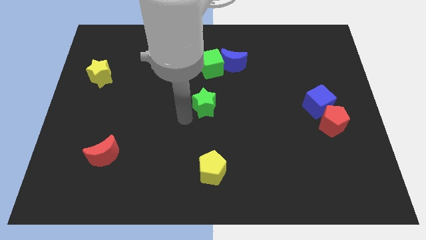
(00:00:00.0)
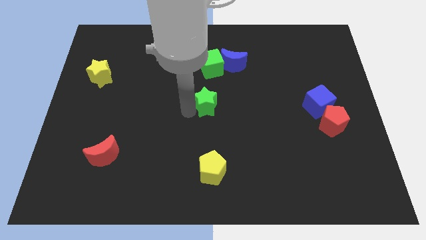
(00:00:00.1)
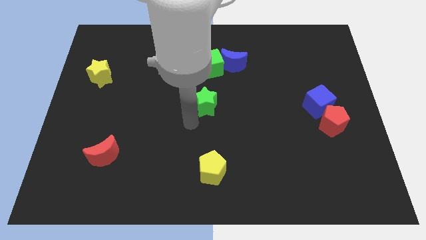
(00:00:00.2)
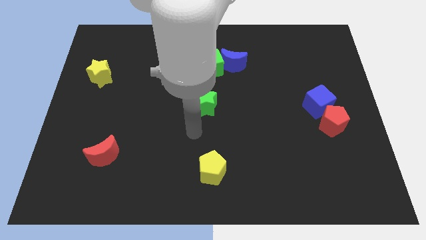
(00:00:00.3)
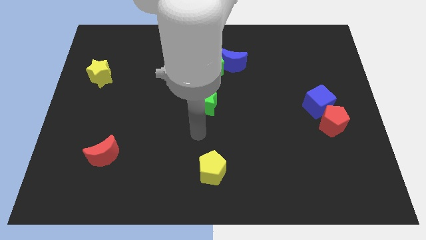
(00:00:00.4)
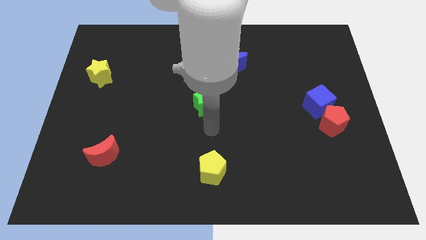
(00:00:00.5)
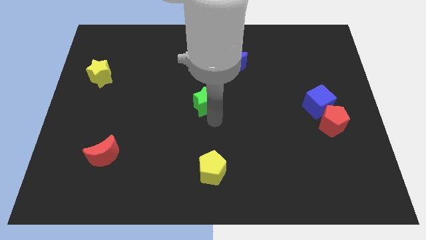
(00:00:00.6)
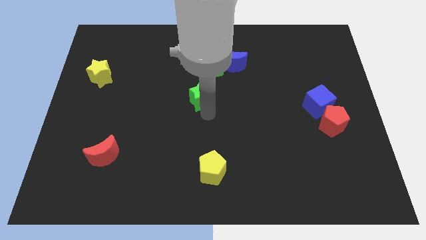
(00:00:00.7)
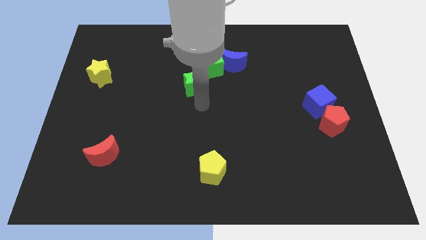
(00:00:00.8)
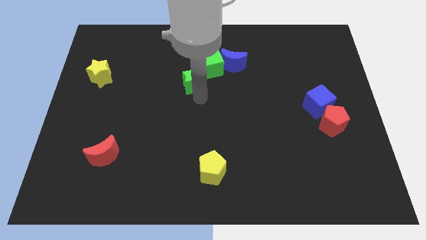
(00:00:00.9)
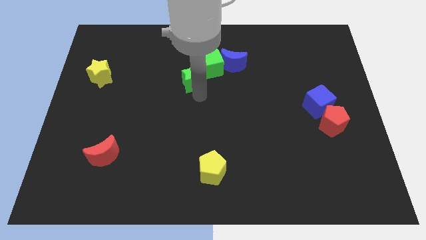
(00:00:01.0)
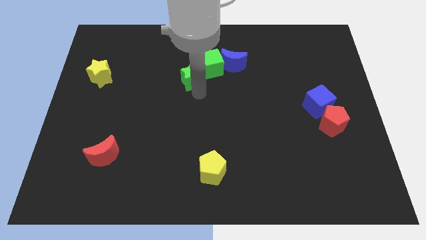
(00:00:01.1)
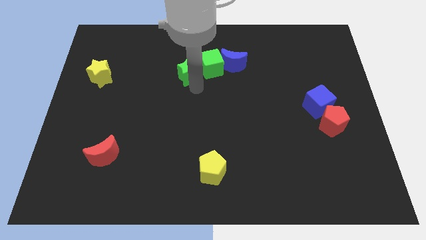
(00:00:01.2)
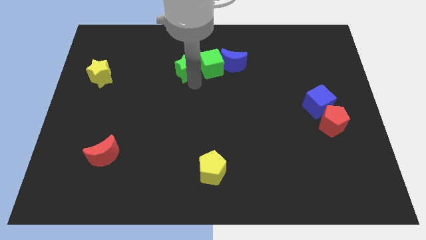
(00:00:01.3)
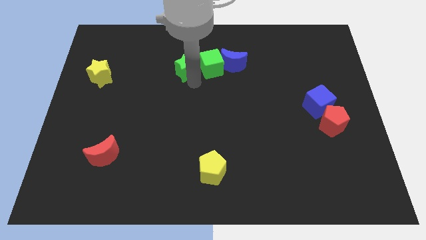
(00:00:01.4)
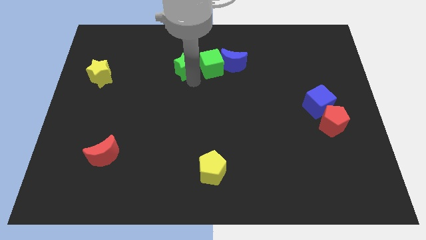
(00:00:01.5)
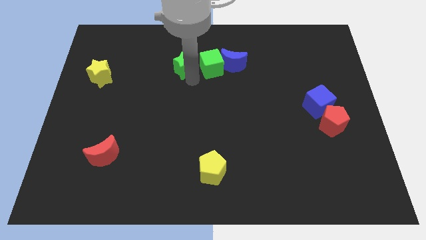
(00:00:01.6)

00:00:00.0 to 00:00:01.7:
place the green star left to the green cube

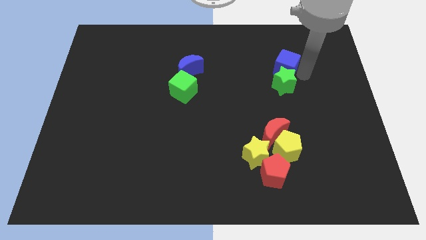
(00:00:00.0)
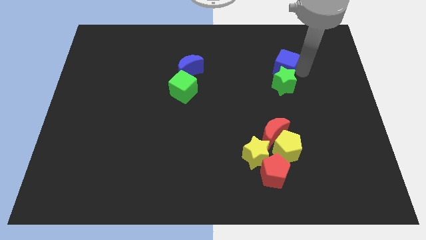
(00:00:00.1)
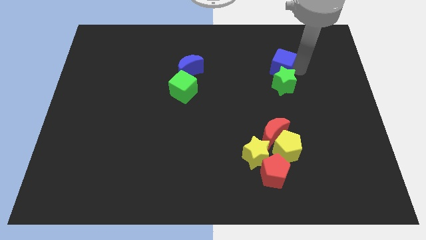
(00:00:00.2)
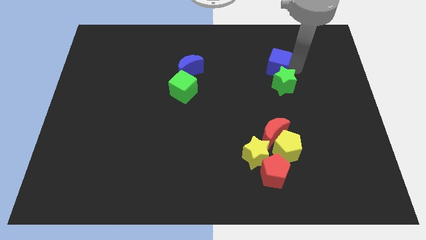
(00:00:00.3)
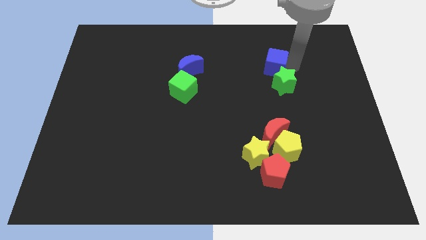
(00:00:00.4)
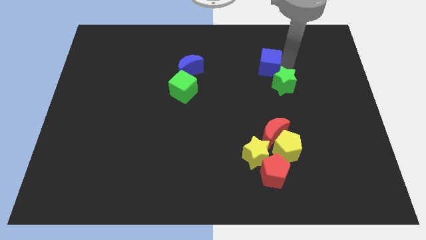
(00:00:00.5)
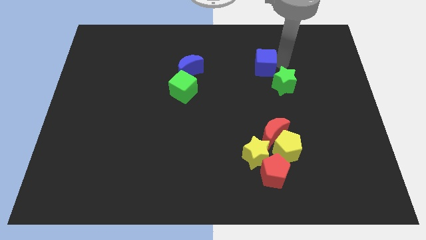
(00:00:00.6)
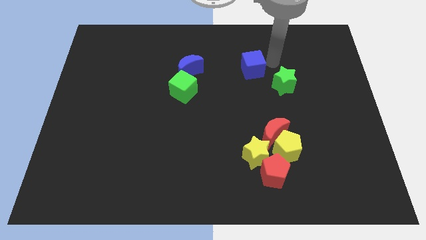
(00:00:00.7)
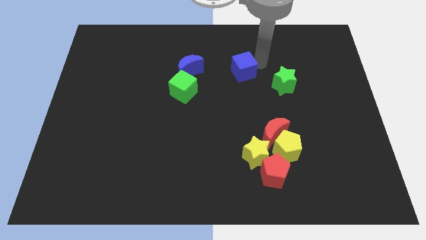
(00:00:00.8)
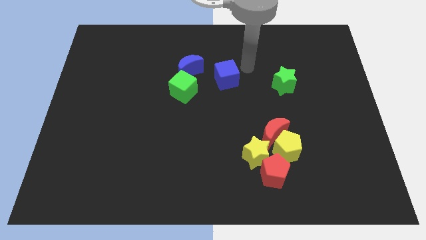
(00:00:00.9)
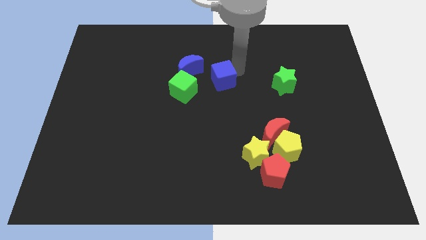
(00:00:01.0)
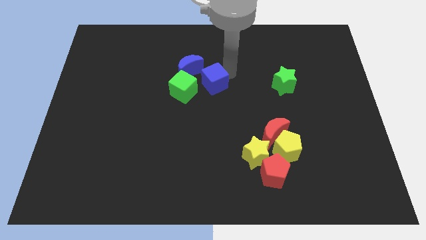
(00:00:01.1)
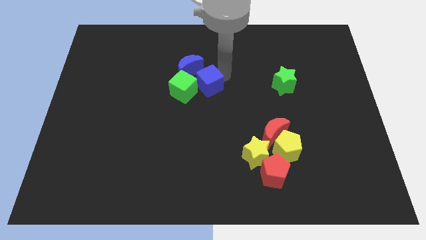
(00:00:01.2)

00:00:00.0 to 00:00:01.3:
move blue cube away from the green star

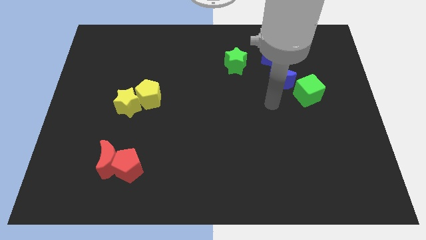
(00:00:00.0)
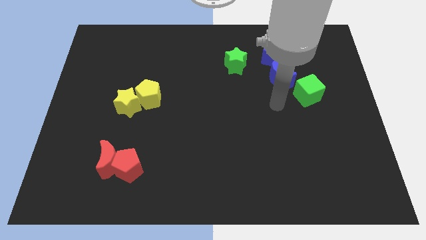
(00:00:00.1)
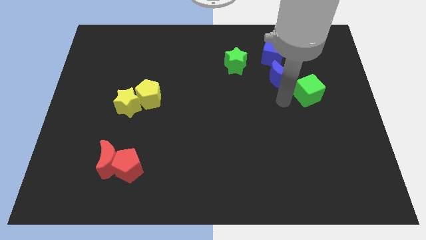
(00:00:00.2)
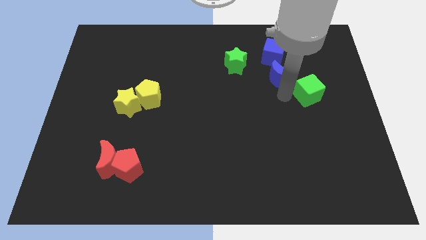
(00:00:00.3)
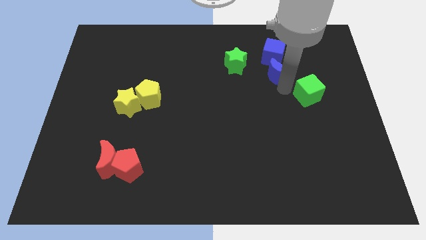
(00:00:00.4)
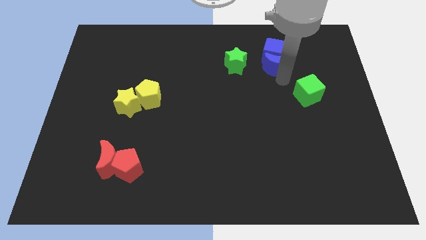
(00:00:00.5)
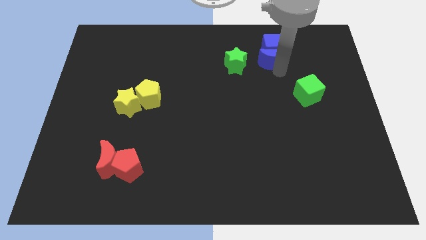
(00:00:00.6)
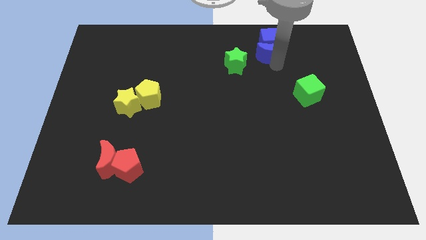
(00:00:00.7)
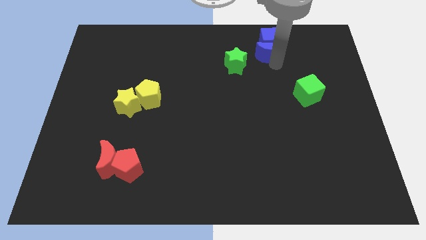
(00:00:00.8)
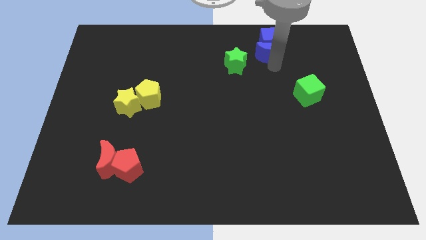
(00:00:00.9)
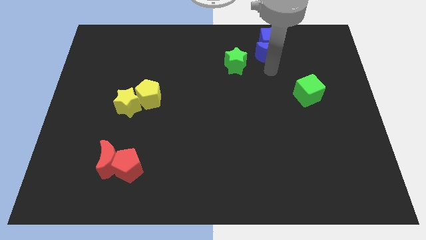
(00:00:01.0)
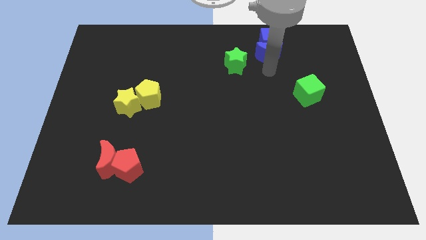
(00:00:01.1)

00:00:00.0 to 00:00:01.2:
push the blue moon into the blue cube

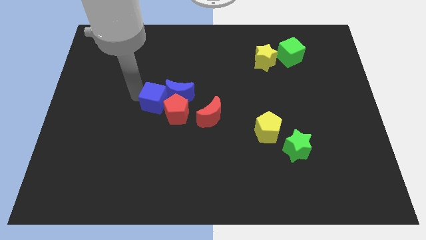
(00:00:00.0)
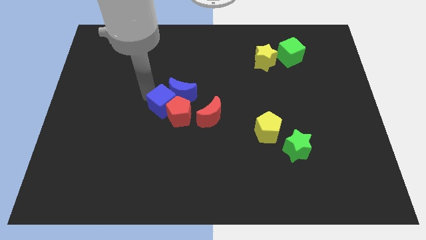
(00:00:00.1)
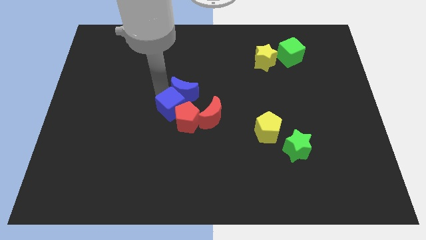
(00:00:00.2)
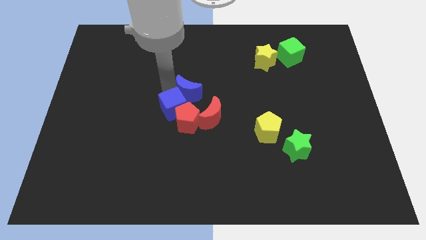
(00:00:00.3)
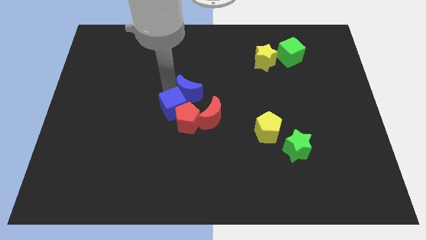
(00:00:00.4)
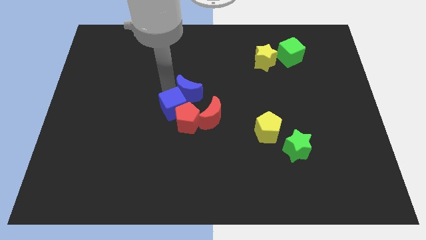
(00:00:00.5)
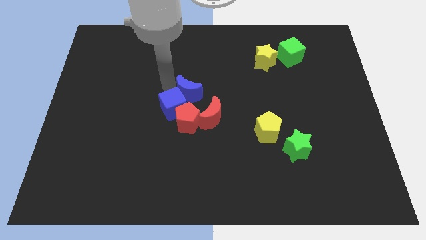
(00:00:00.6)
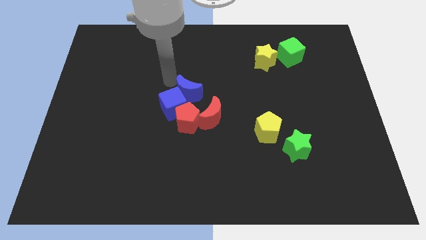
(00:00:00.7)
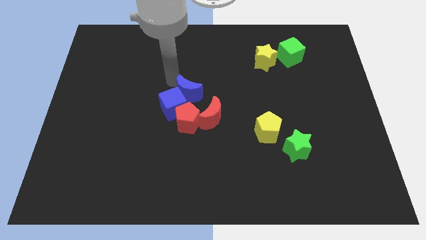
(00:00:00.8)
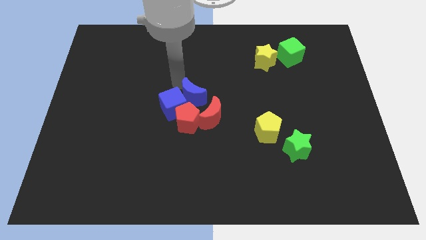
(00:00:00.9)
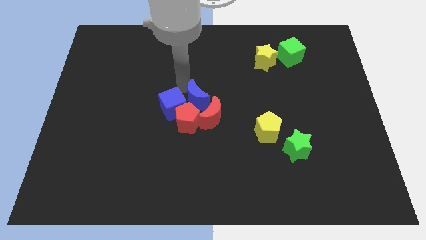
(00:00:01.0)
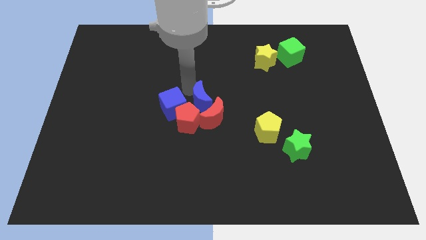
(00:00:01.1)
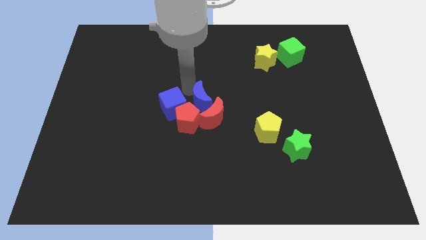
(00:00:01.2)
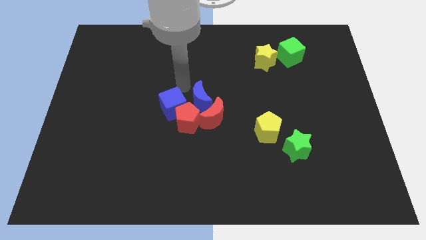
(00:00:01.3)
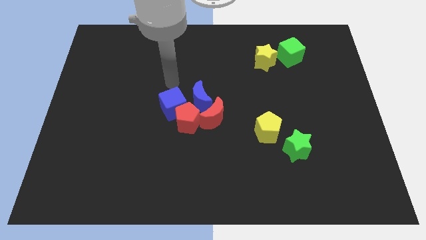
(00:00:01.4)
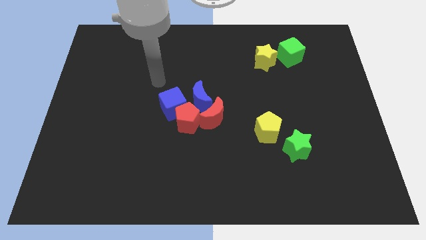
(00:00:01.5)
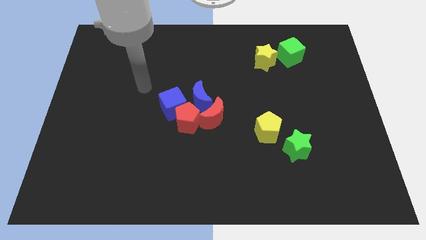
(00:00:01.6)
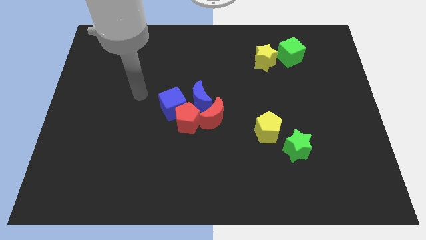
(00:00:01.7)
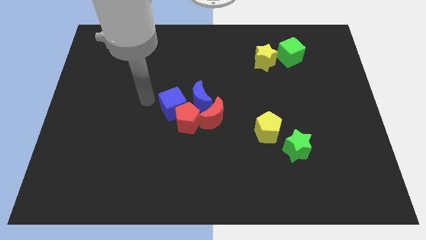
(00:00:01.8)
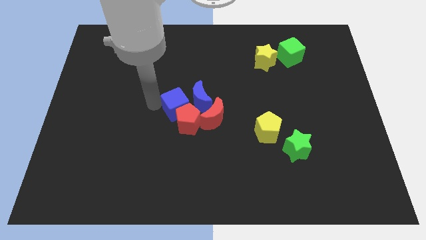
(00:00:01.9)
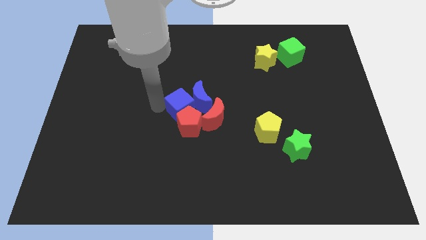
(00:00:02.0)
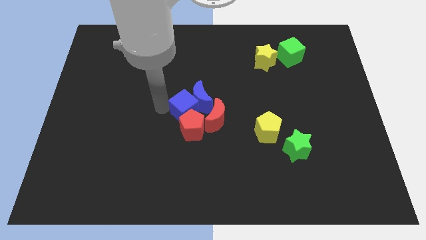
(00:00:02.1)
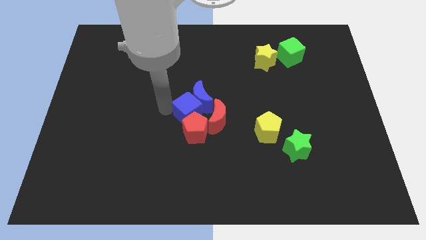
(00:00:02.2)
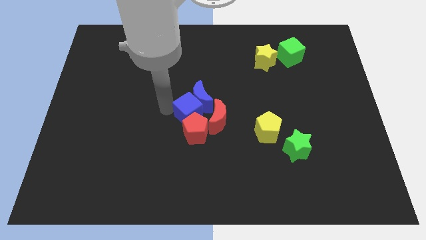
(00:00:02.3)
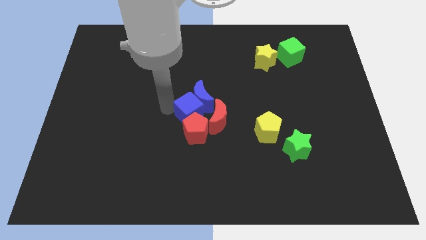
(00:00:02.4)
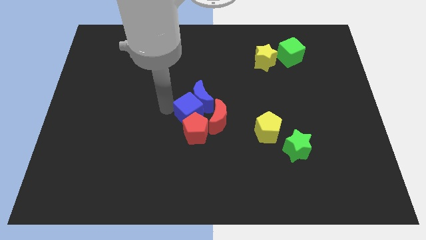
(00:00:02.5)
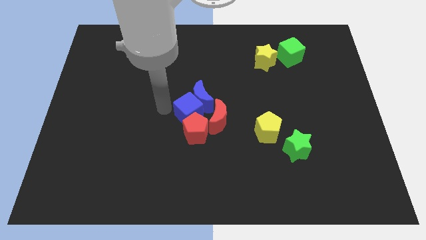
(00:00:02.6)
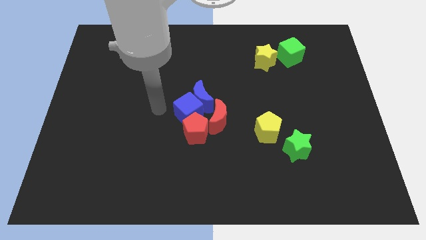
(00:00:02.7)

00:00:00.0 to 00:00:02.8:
move the group of blocks to the center of the board

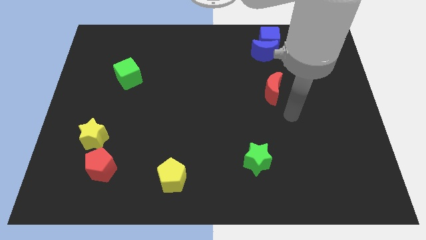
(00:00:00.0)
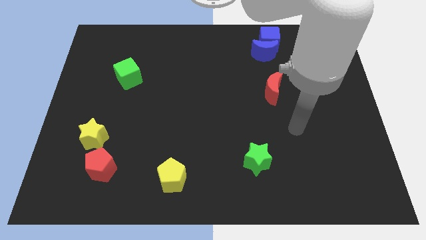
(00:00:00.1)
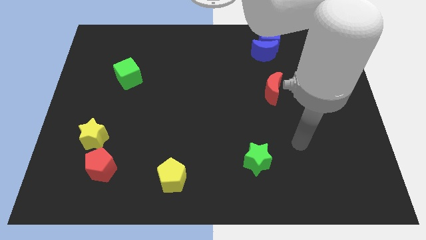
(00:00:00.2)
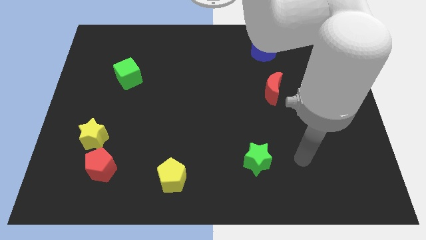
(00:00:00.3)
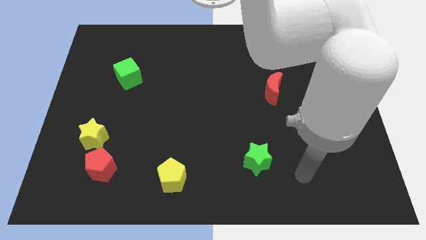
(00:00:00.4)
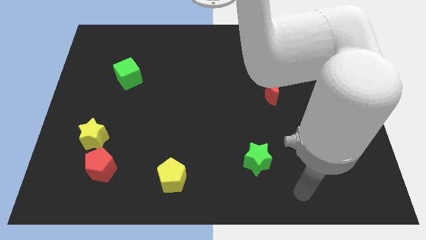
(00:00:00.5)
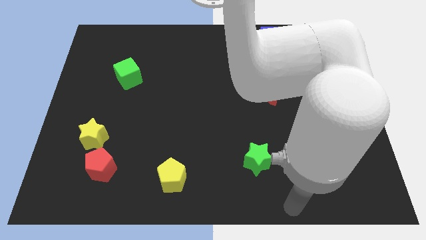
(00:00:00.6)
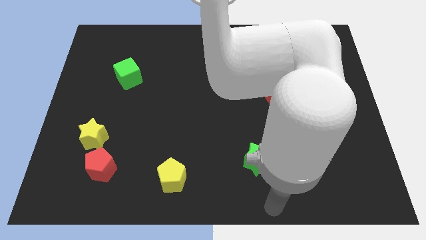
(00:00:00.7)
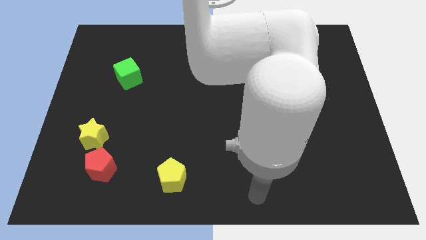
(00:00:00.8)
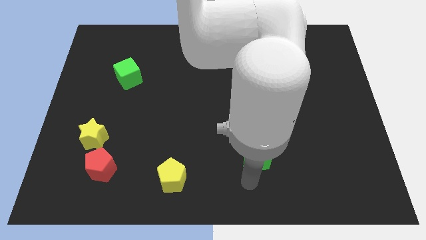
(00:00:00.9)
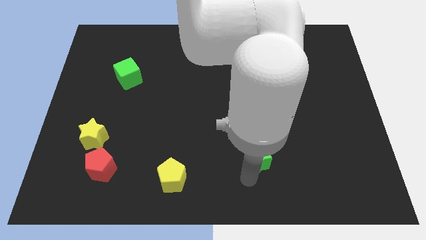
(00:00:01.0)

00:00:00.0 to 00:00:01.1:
point the arm below green star

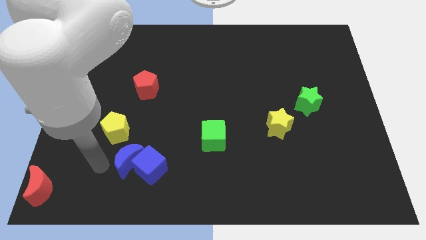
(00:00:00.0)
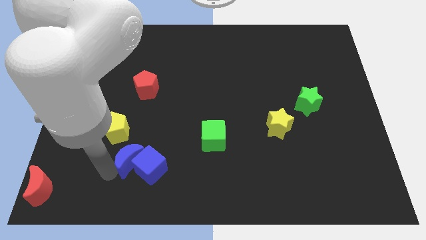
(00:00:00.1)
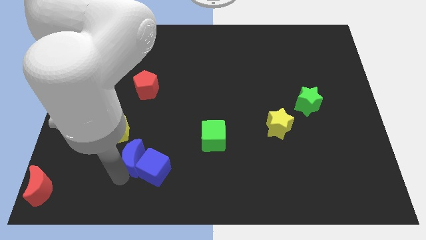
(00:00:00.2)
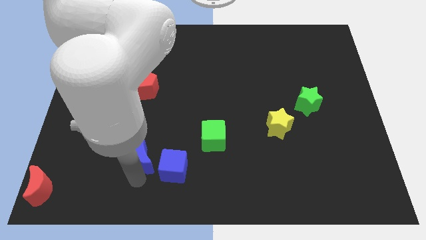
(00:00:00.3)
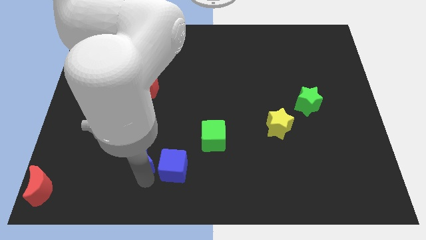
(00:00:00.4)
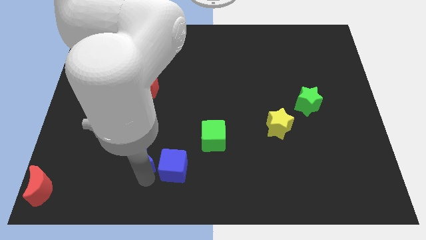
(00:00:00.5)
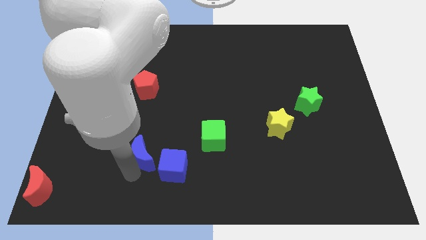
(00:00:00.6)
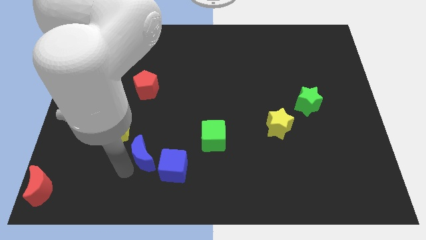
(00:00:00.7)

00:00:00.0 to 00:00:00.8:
separate the group of blue blocks

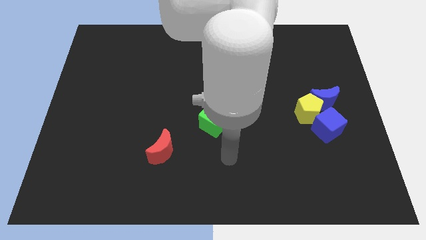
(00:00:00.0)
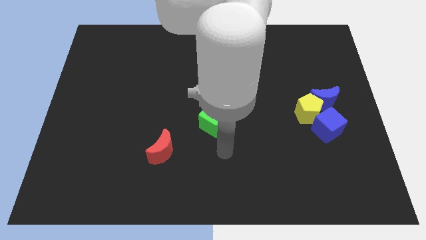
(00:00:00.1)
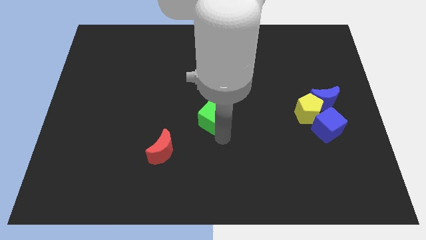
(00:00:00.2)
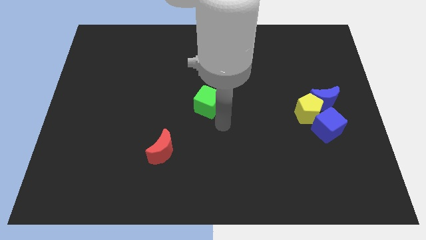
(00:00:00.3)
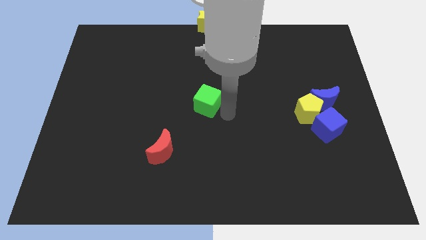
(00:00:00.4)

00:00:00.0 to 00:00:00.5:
move the green cube to the center of the board
